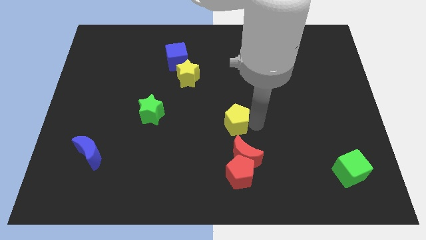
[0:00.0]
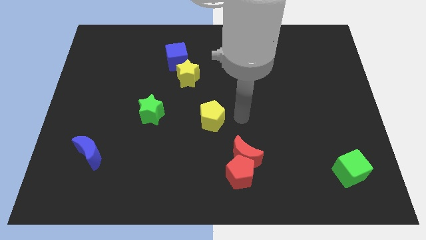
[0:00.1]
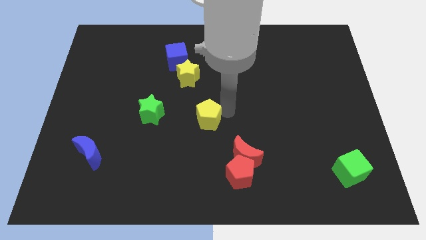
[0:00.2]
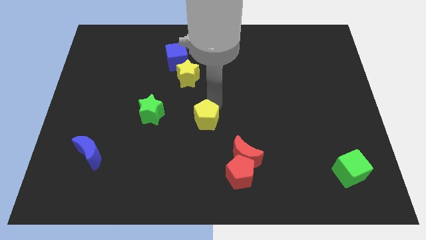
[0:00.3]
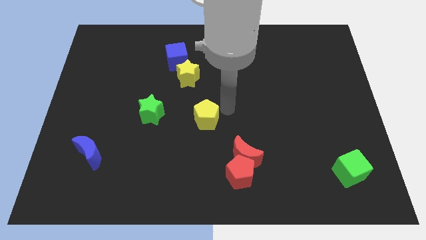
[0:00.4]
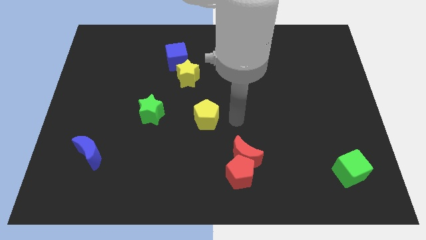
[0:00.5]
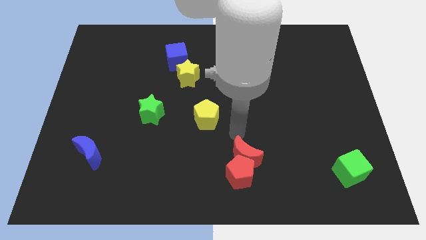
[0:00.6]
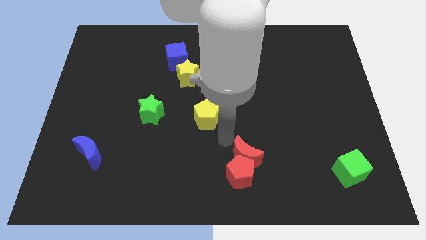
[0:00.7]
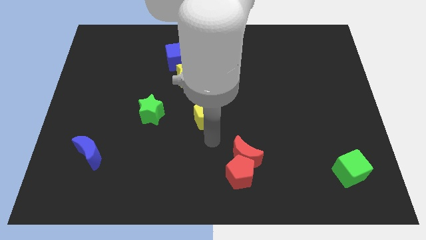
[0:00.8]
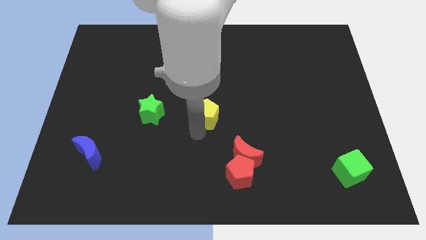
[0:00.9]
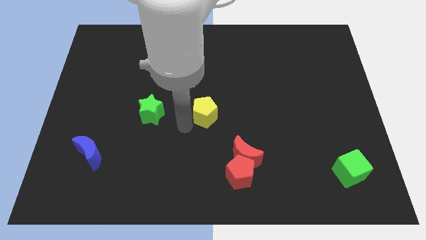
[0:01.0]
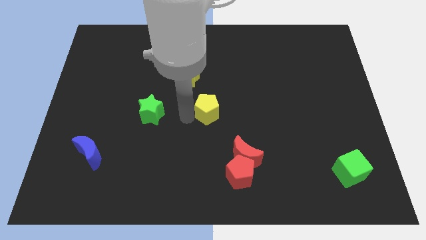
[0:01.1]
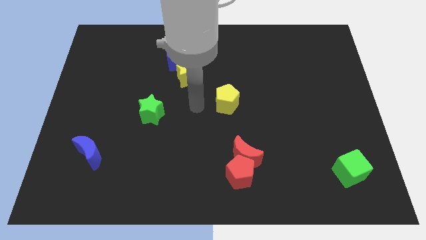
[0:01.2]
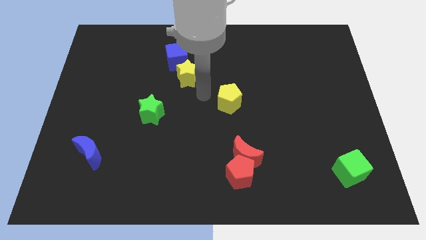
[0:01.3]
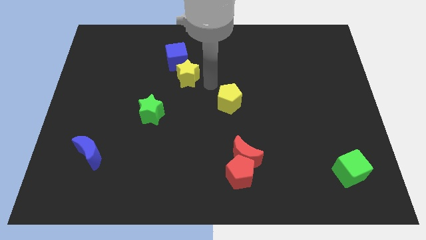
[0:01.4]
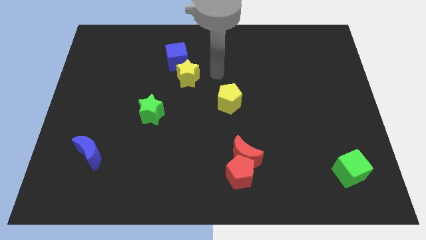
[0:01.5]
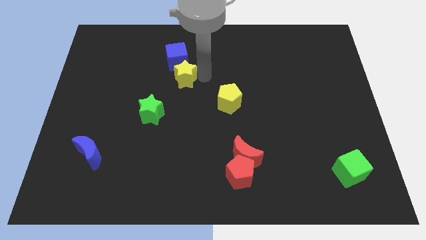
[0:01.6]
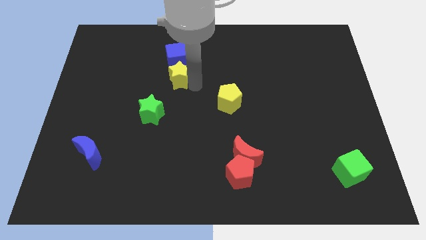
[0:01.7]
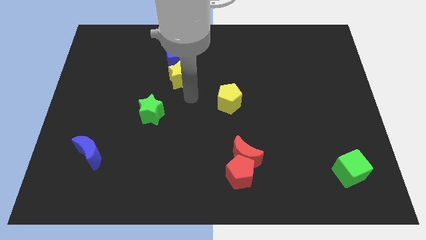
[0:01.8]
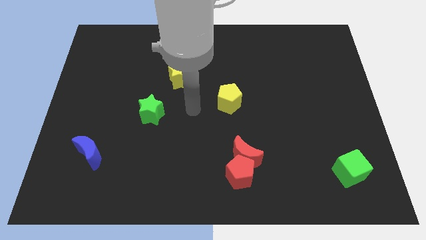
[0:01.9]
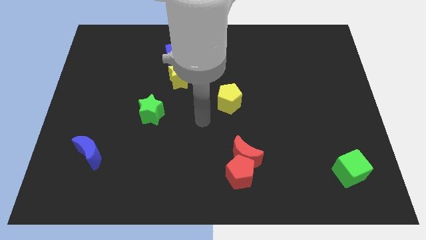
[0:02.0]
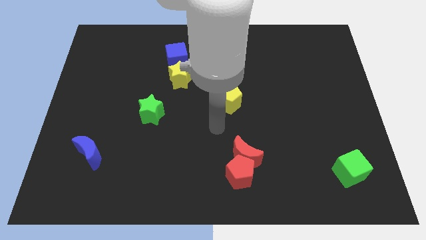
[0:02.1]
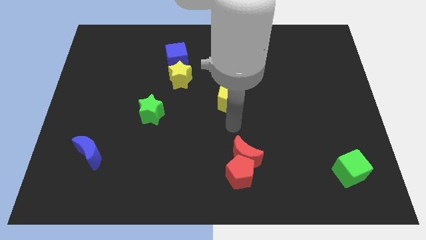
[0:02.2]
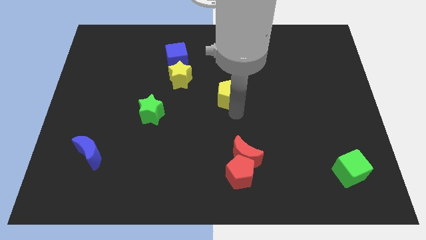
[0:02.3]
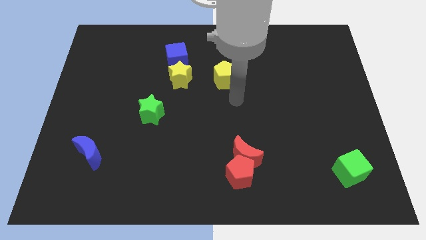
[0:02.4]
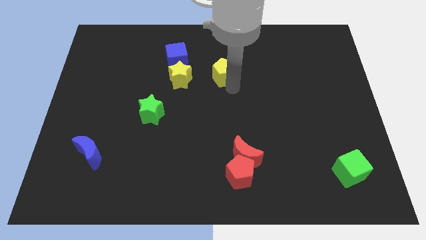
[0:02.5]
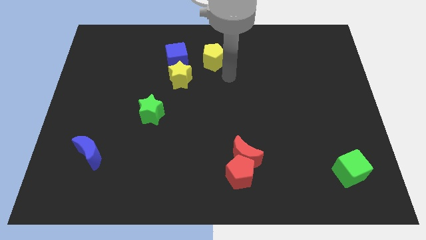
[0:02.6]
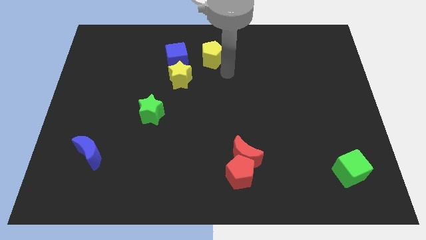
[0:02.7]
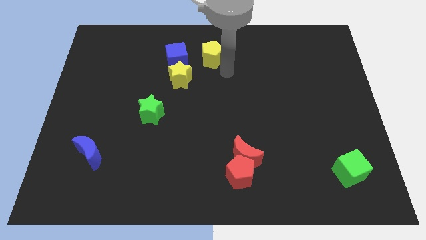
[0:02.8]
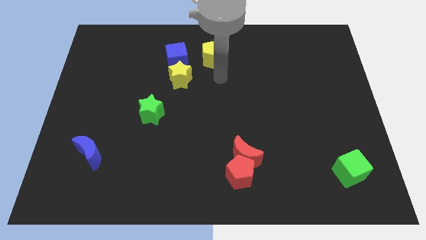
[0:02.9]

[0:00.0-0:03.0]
place the yellow pentagon to the right of the blue cube

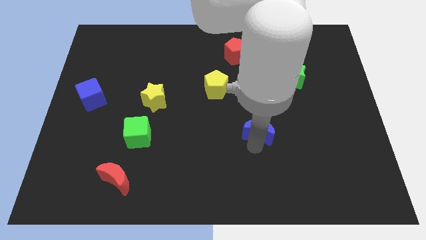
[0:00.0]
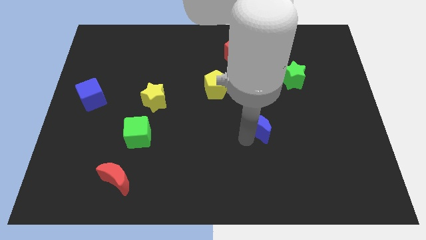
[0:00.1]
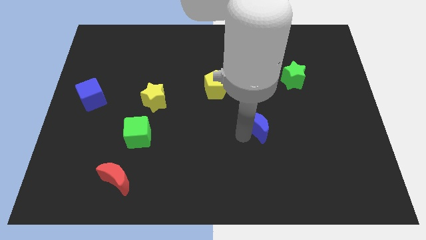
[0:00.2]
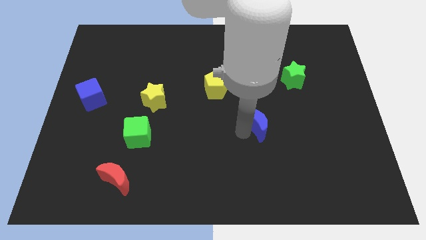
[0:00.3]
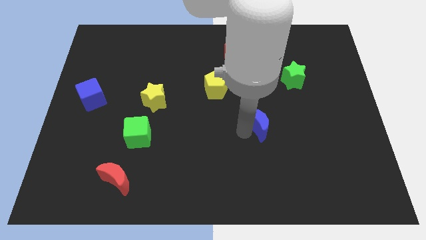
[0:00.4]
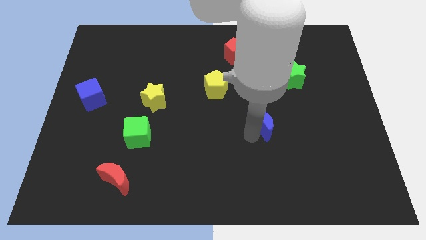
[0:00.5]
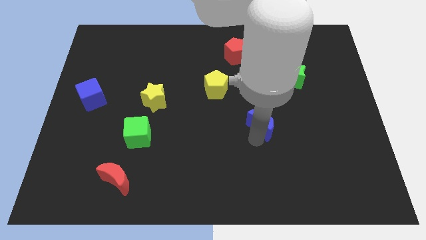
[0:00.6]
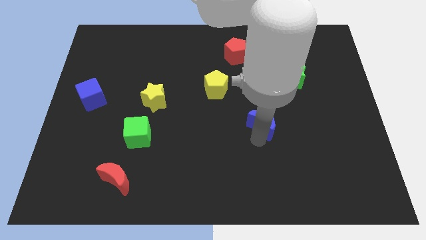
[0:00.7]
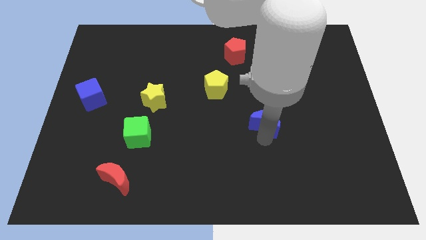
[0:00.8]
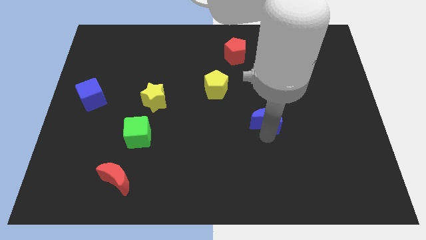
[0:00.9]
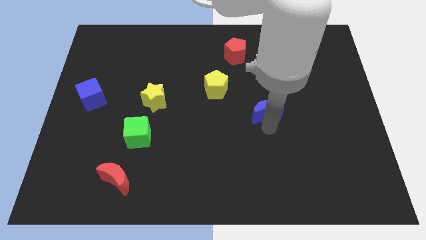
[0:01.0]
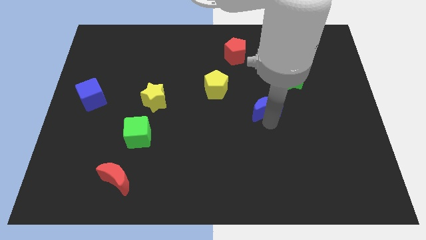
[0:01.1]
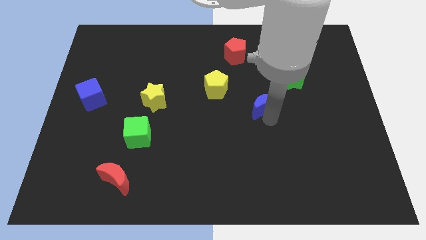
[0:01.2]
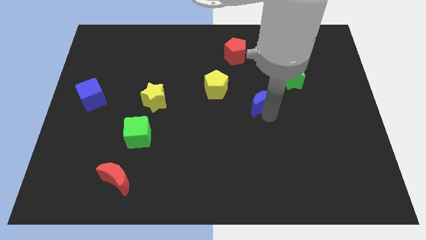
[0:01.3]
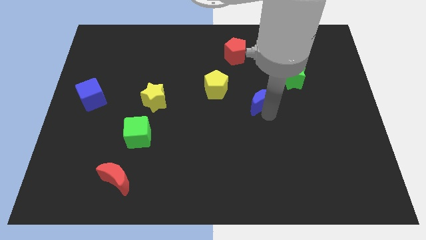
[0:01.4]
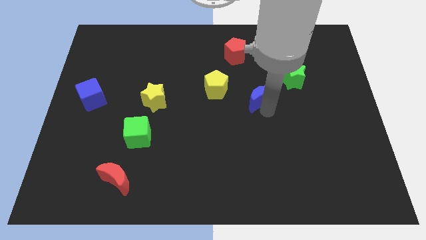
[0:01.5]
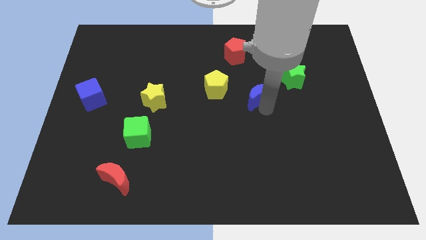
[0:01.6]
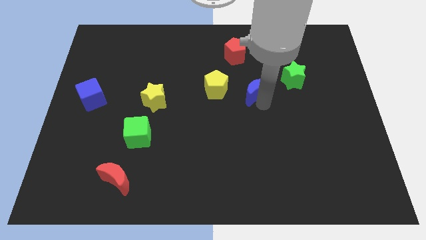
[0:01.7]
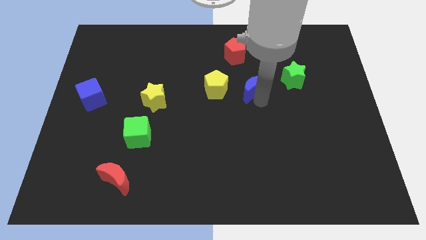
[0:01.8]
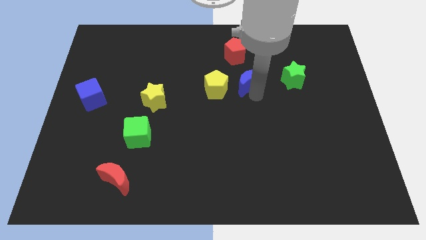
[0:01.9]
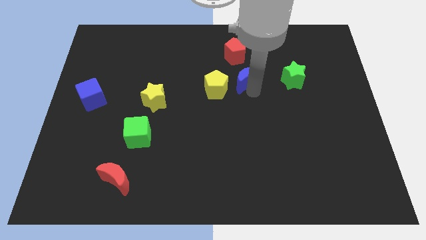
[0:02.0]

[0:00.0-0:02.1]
move the blue moon right to the yellow pentagon

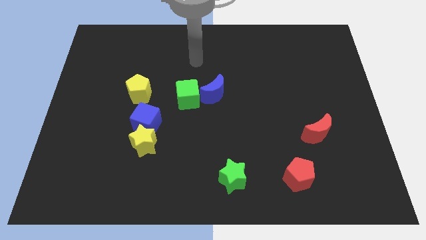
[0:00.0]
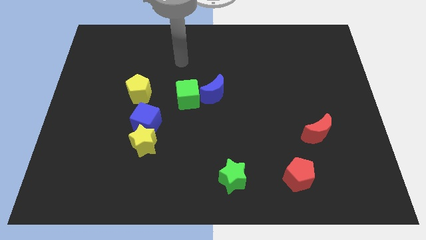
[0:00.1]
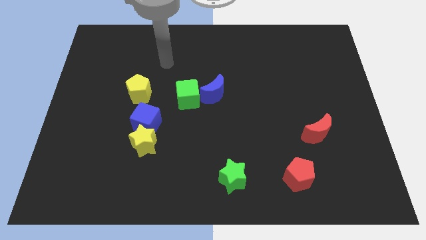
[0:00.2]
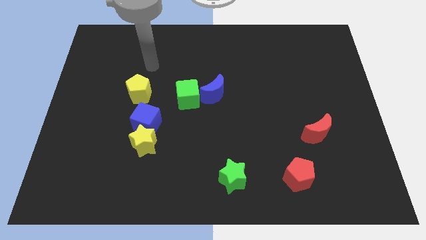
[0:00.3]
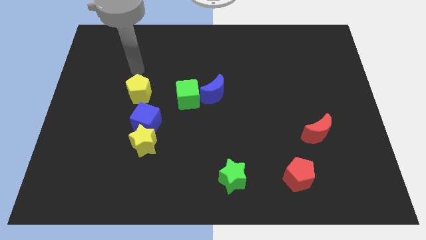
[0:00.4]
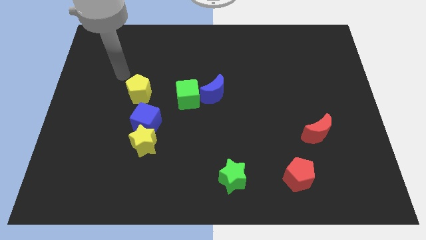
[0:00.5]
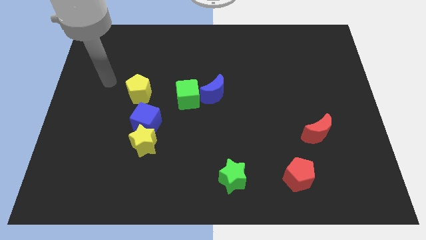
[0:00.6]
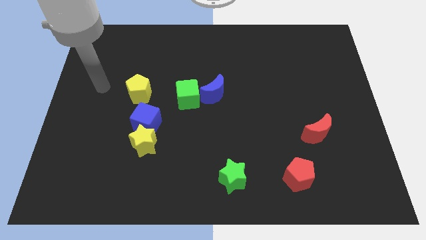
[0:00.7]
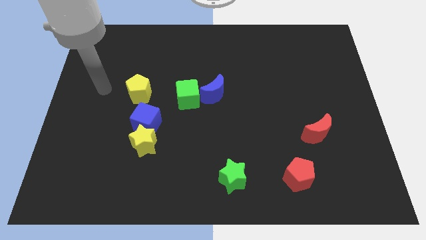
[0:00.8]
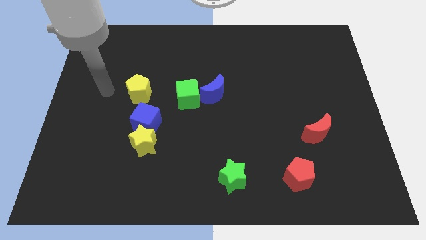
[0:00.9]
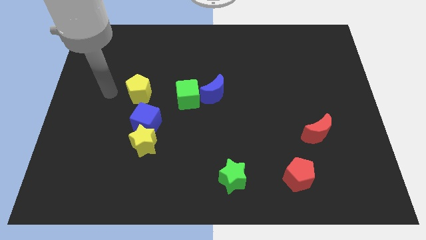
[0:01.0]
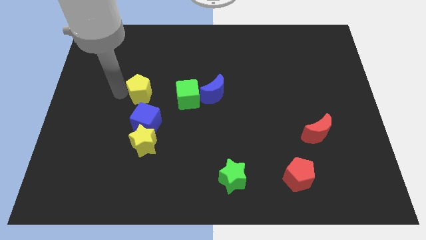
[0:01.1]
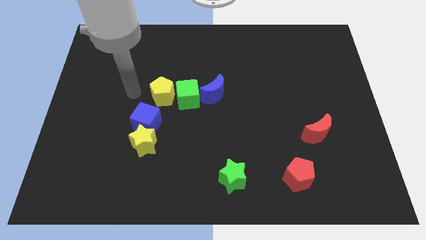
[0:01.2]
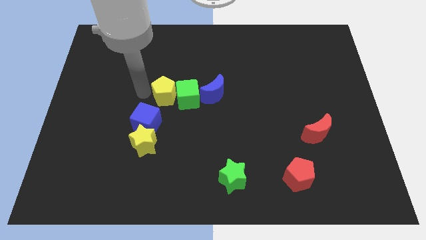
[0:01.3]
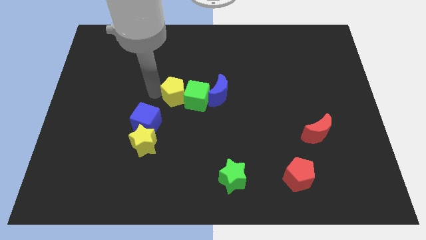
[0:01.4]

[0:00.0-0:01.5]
drag the yellow pentagon close to the green cube

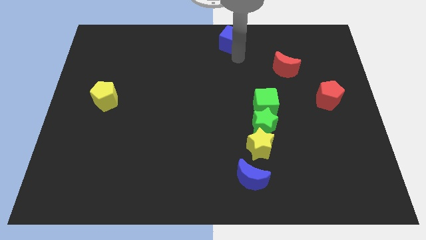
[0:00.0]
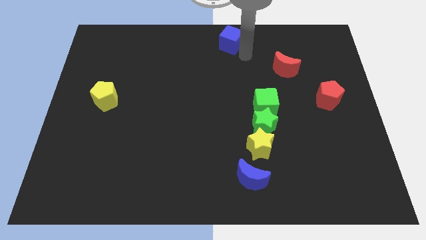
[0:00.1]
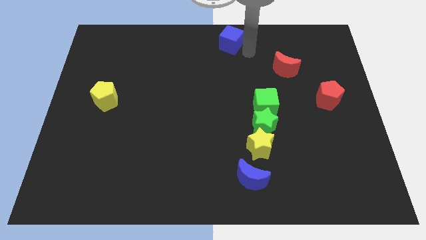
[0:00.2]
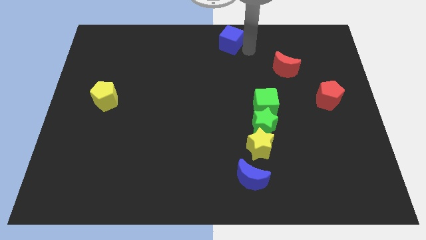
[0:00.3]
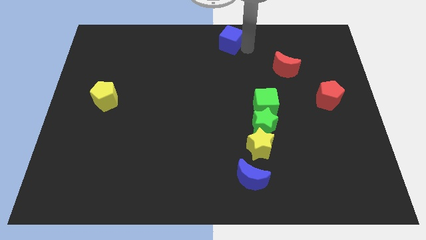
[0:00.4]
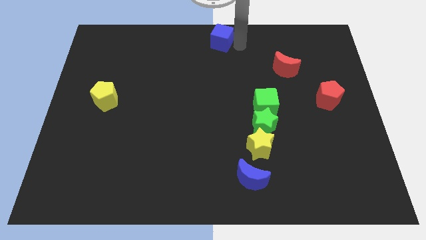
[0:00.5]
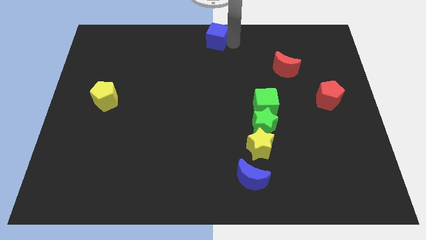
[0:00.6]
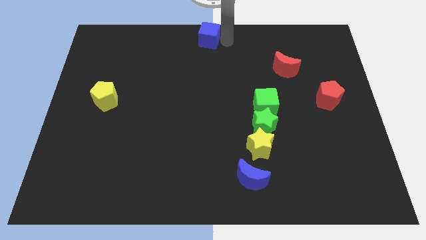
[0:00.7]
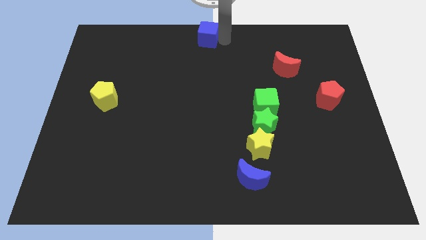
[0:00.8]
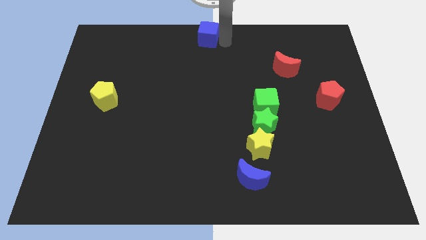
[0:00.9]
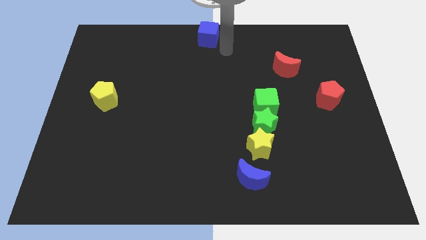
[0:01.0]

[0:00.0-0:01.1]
move blue cube upwards

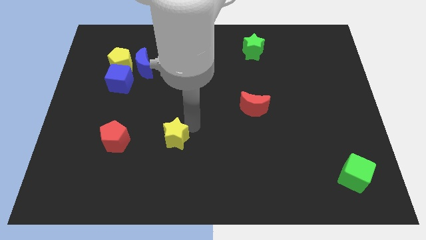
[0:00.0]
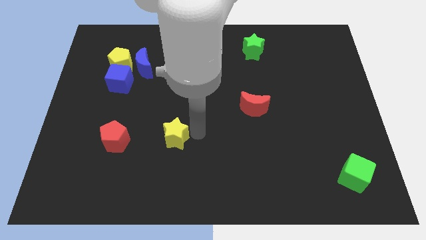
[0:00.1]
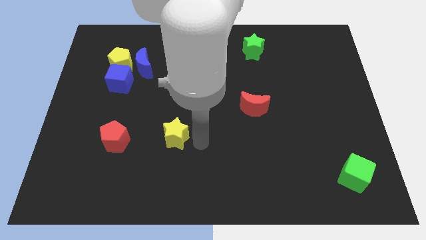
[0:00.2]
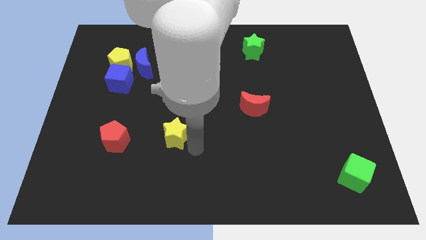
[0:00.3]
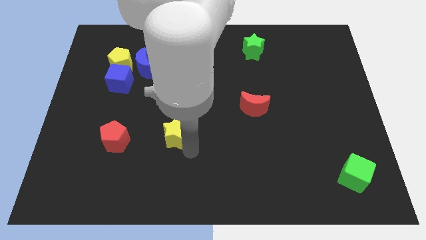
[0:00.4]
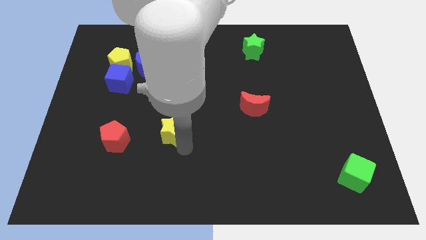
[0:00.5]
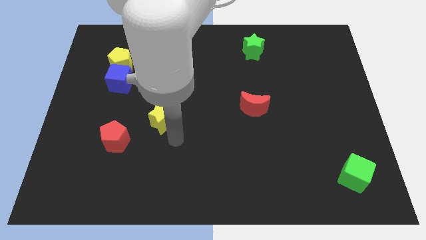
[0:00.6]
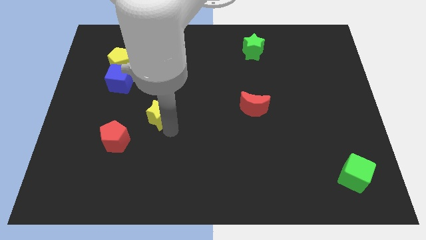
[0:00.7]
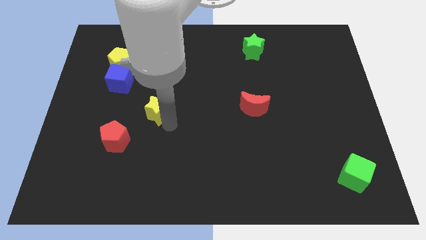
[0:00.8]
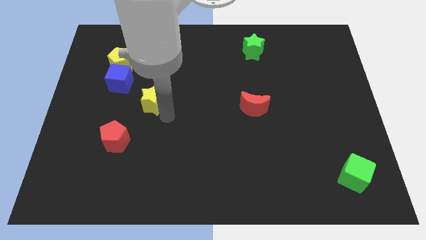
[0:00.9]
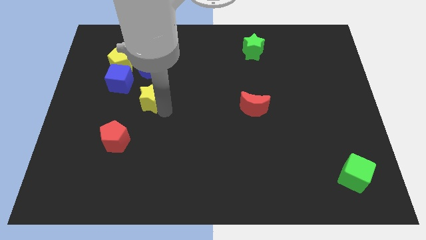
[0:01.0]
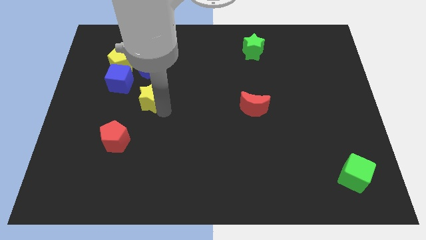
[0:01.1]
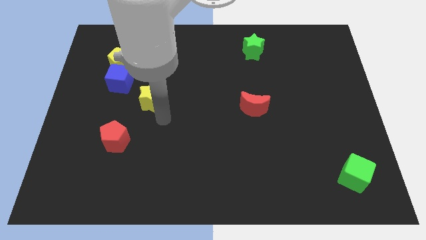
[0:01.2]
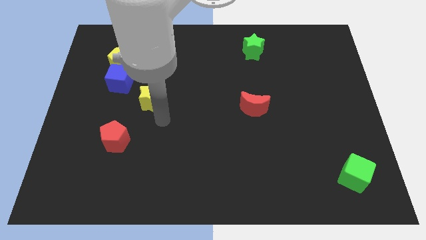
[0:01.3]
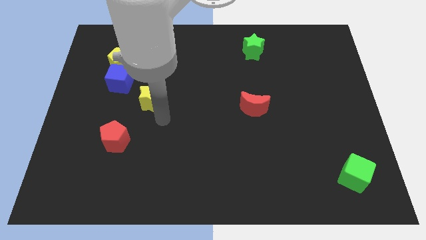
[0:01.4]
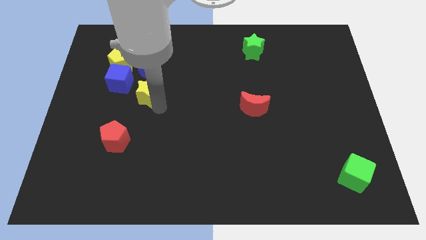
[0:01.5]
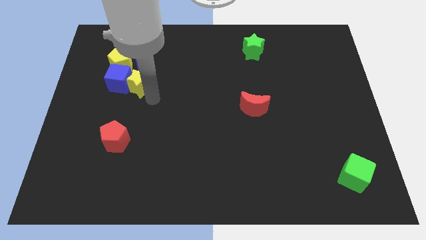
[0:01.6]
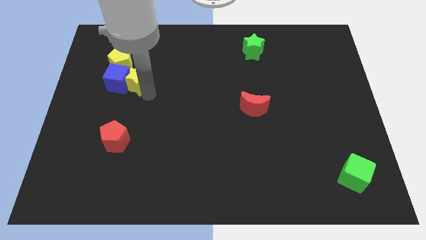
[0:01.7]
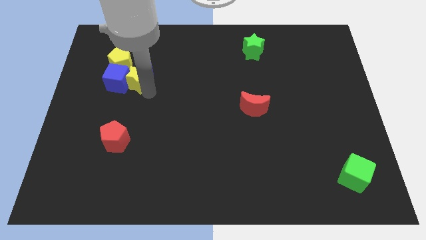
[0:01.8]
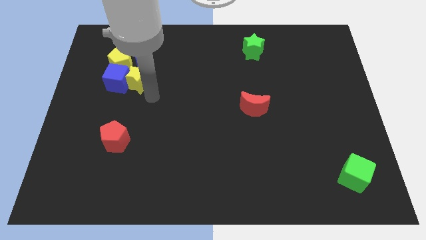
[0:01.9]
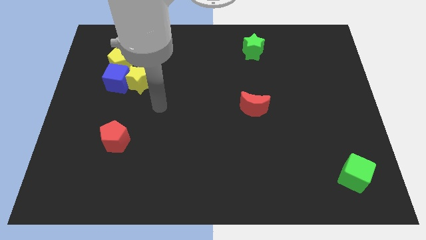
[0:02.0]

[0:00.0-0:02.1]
slide yellow star to the right of the blue cube
